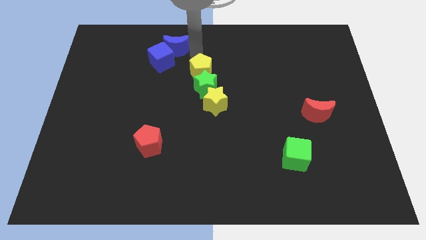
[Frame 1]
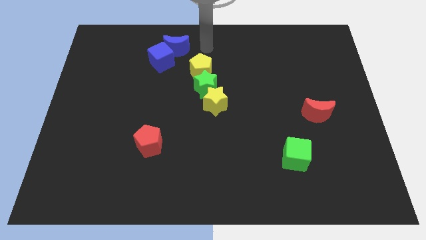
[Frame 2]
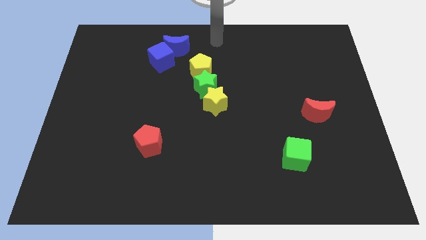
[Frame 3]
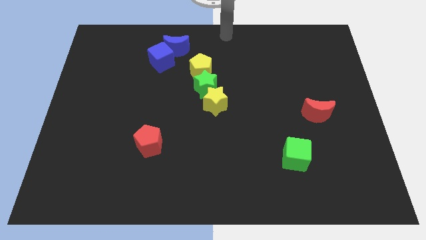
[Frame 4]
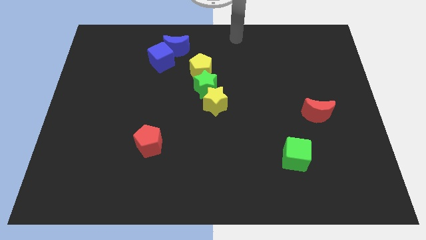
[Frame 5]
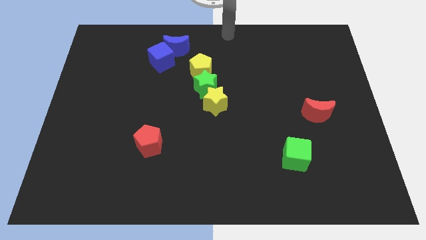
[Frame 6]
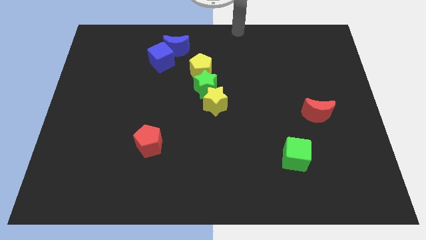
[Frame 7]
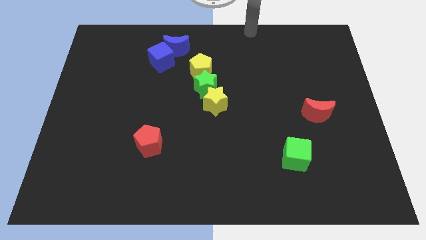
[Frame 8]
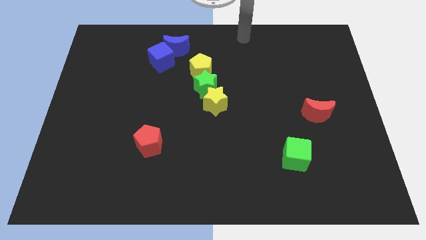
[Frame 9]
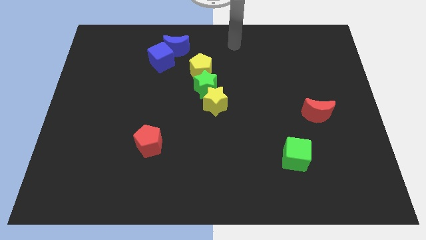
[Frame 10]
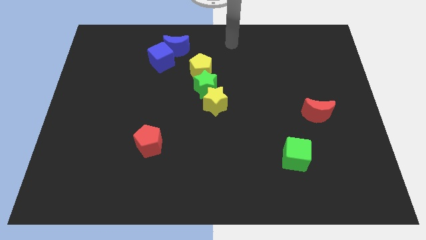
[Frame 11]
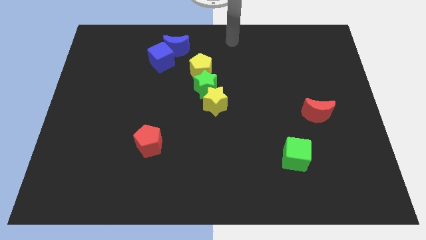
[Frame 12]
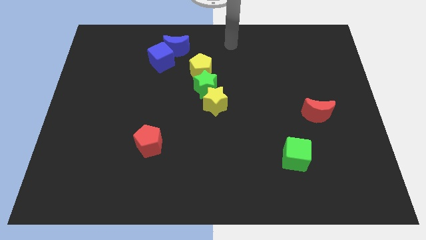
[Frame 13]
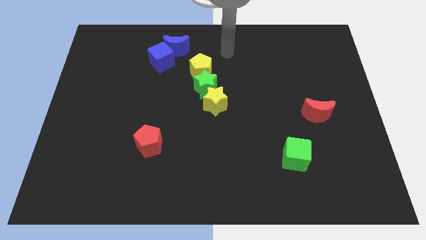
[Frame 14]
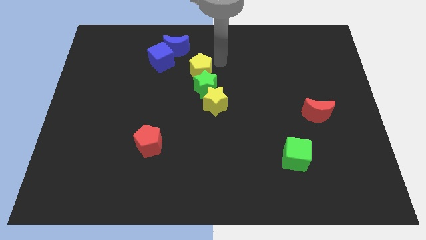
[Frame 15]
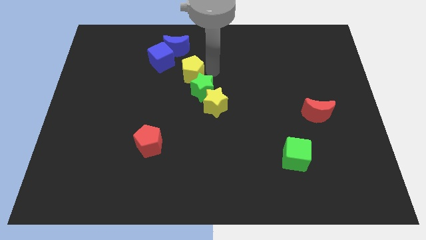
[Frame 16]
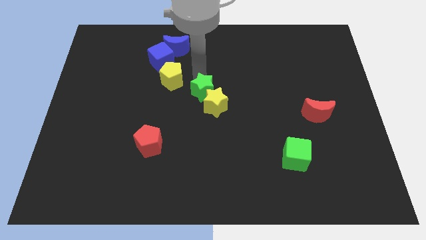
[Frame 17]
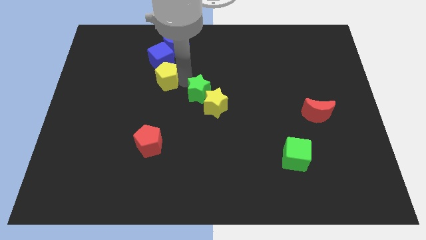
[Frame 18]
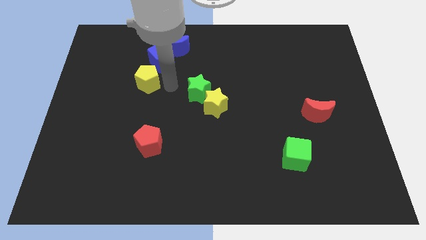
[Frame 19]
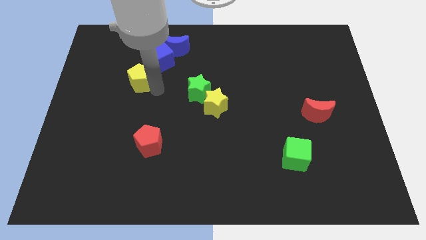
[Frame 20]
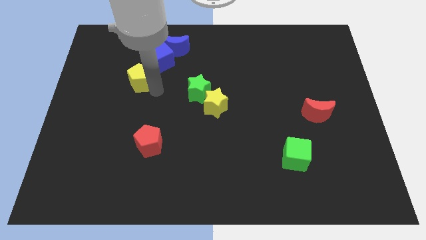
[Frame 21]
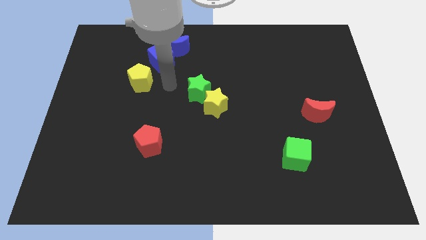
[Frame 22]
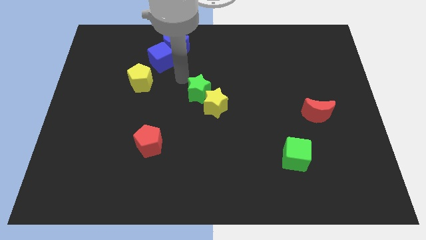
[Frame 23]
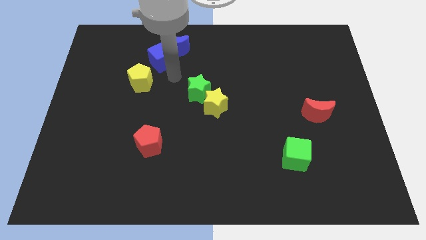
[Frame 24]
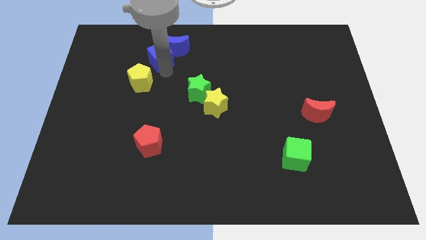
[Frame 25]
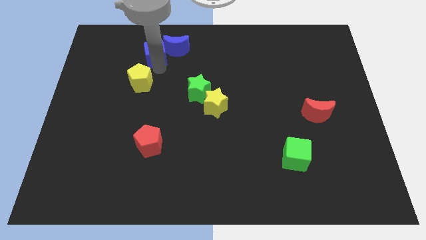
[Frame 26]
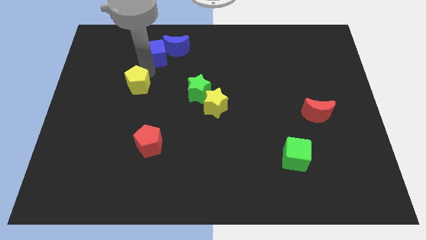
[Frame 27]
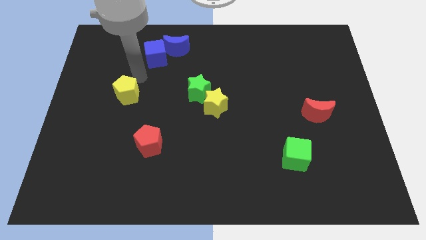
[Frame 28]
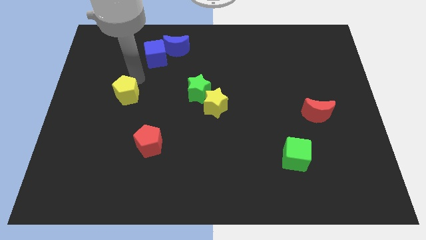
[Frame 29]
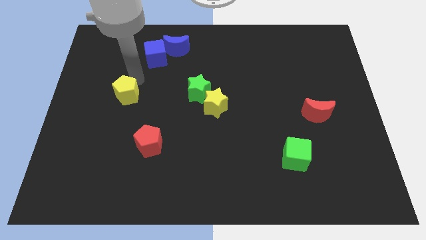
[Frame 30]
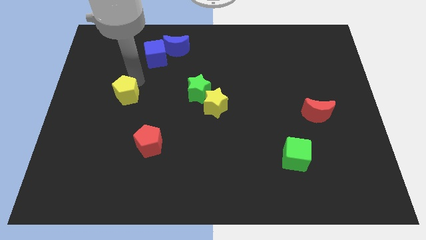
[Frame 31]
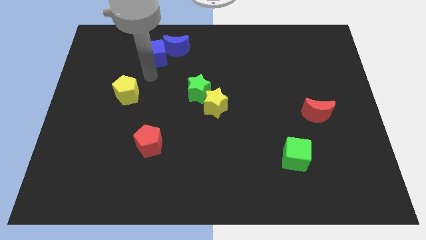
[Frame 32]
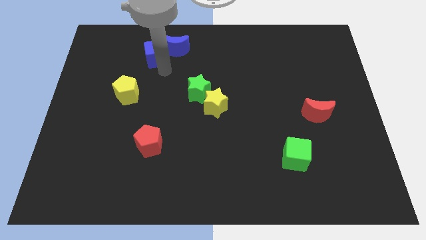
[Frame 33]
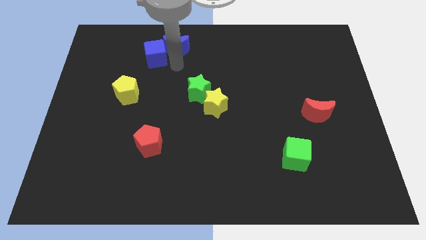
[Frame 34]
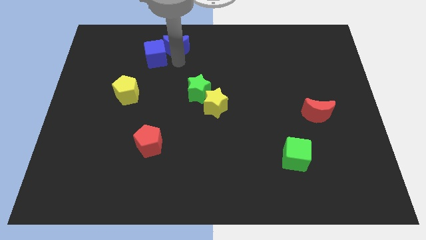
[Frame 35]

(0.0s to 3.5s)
separate the yellow pentagon from the green star

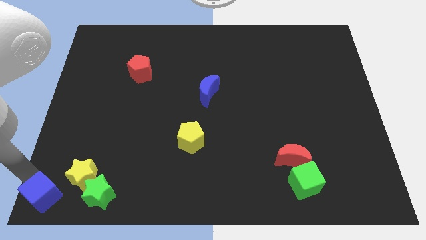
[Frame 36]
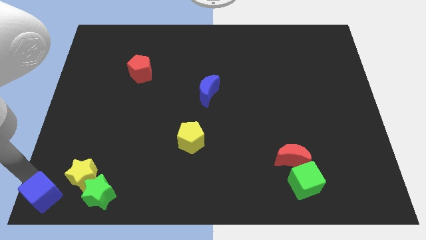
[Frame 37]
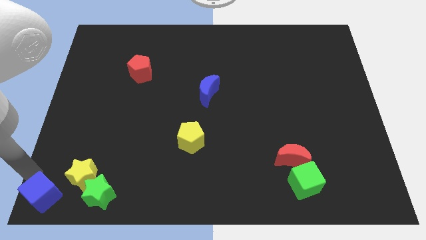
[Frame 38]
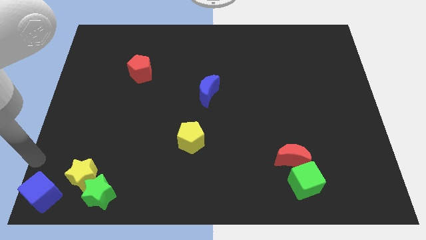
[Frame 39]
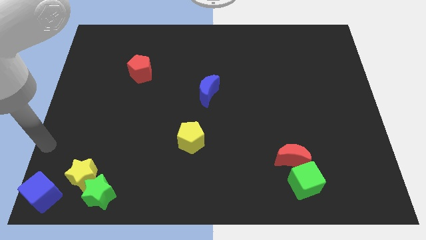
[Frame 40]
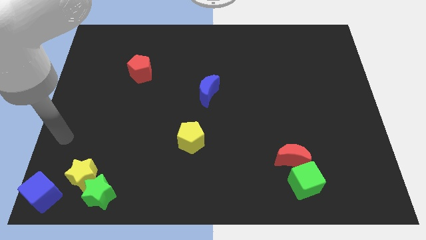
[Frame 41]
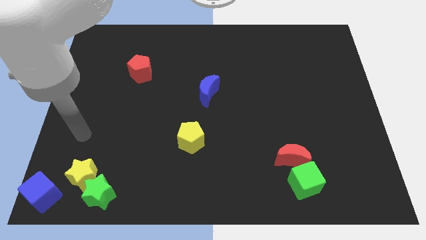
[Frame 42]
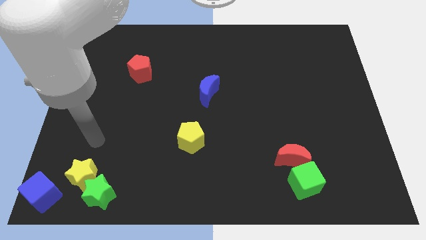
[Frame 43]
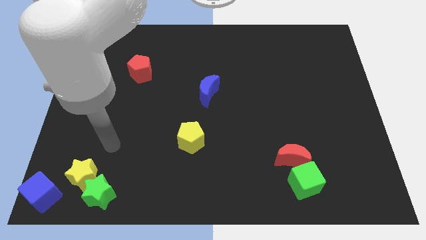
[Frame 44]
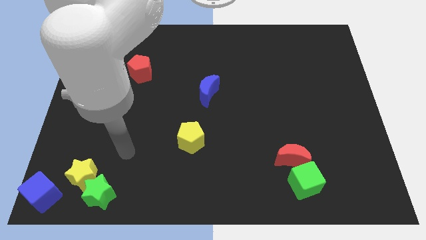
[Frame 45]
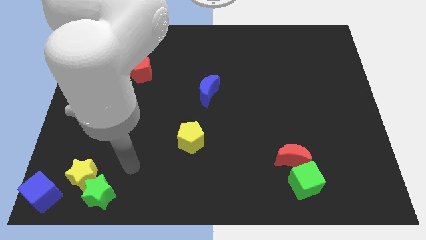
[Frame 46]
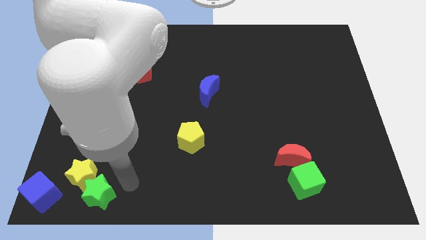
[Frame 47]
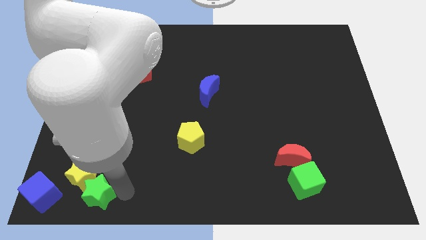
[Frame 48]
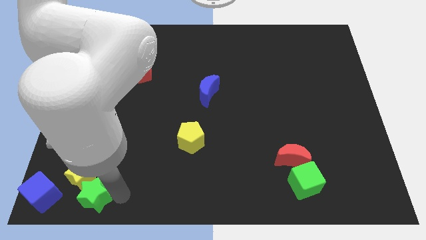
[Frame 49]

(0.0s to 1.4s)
move the arm to the right of the green star

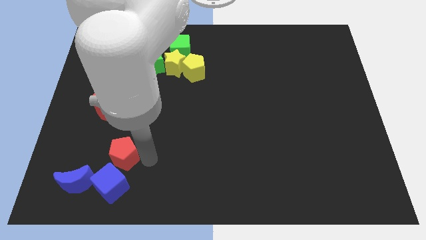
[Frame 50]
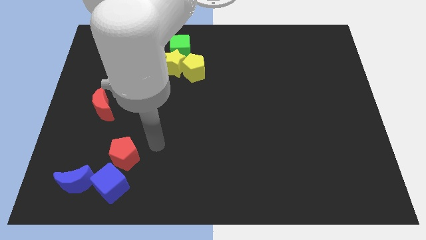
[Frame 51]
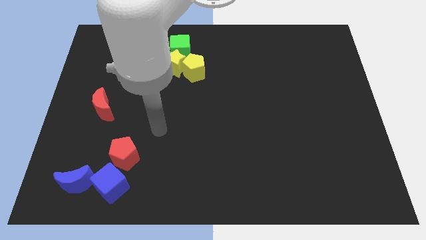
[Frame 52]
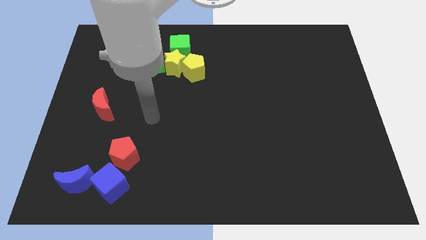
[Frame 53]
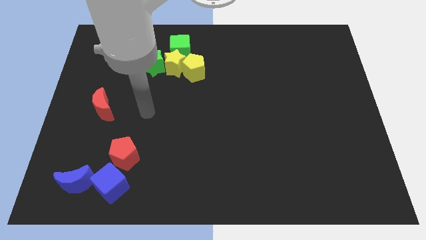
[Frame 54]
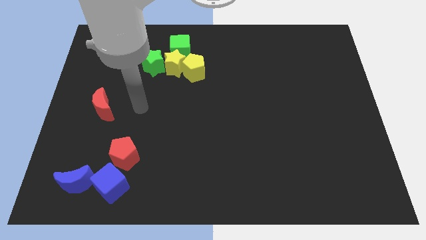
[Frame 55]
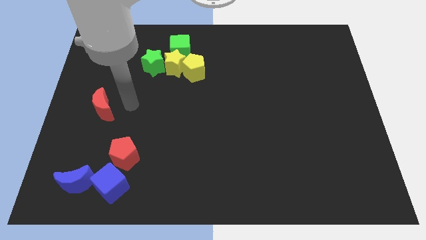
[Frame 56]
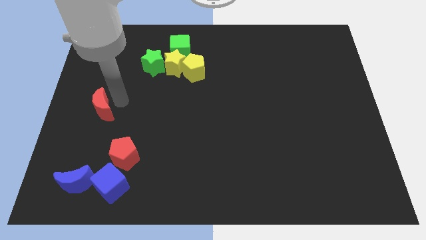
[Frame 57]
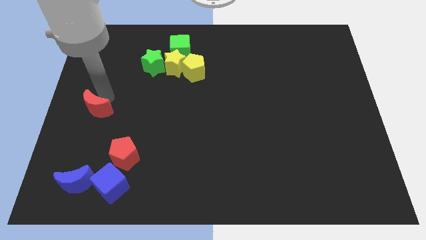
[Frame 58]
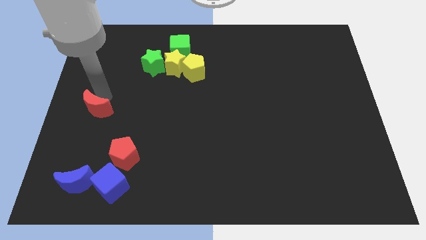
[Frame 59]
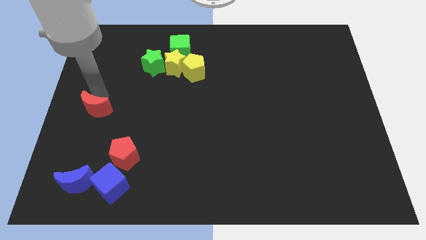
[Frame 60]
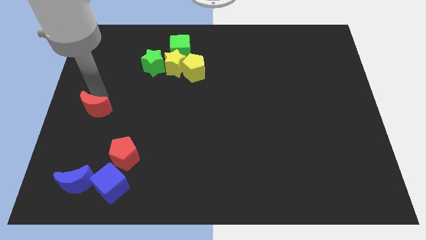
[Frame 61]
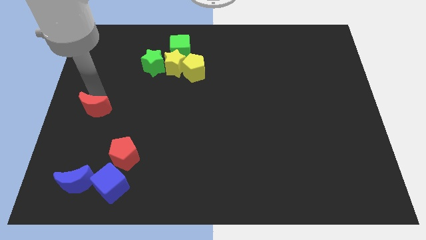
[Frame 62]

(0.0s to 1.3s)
move the red crescent diagonally on the top left side of the red pentagon

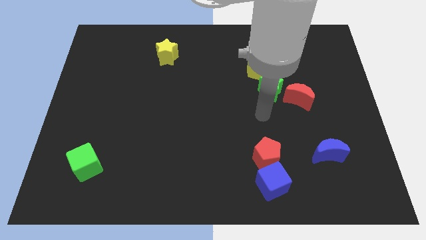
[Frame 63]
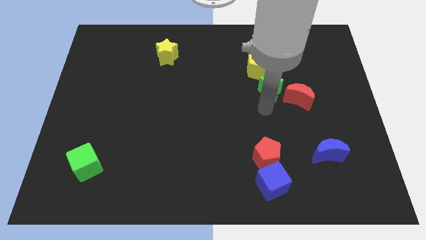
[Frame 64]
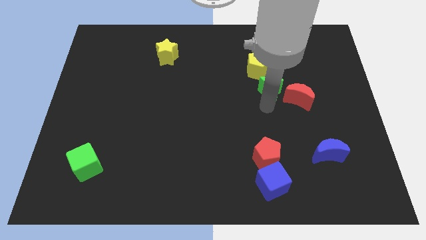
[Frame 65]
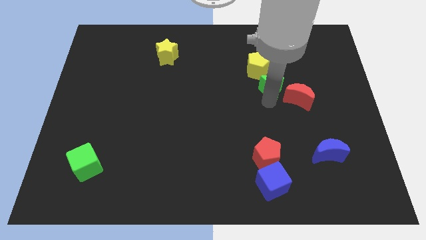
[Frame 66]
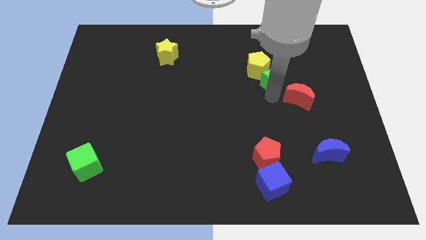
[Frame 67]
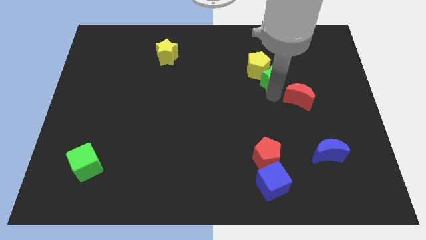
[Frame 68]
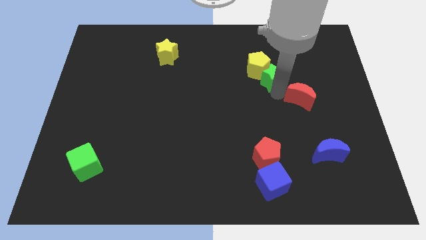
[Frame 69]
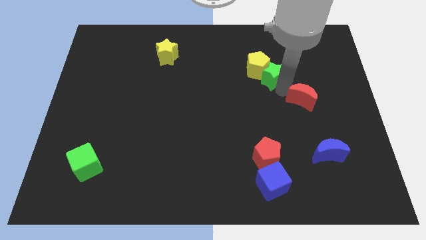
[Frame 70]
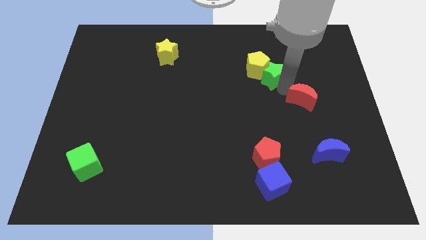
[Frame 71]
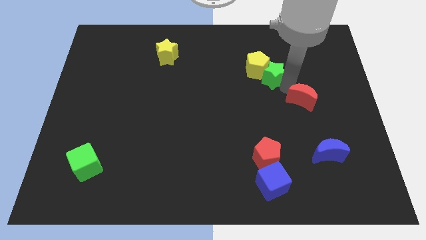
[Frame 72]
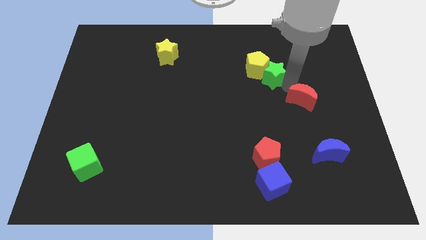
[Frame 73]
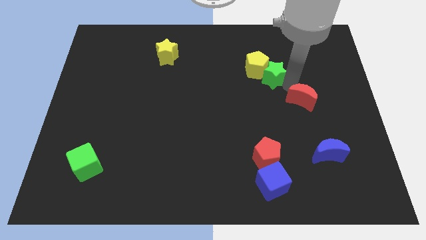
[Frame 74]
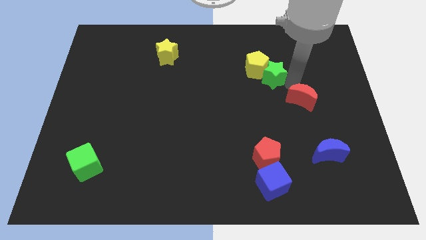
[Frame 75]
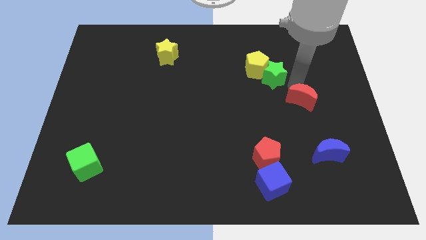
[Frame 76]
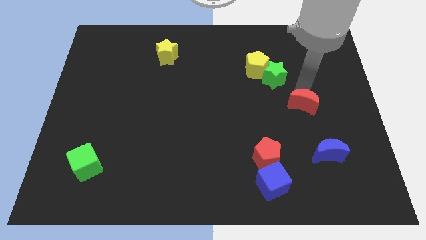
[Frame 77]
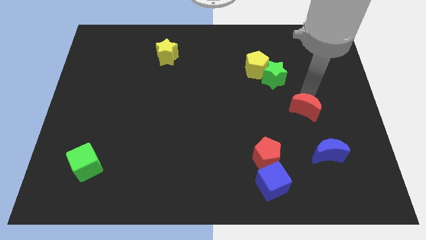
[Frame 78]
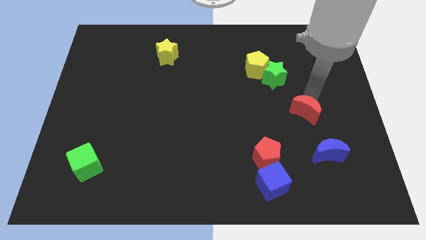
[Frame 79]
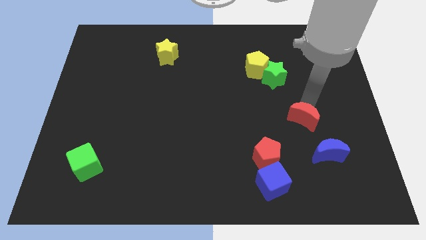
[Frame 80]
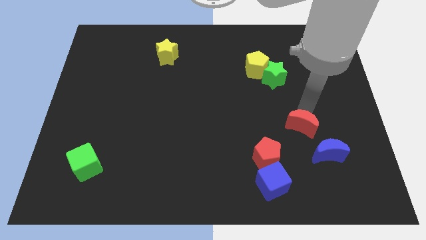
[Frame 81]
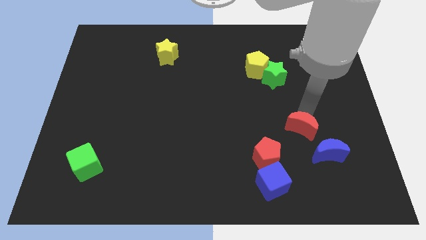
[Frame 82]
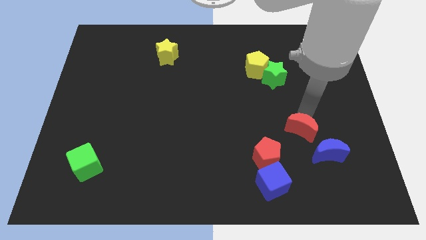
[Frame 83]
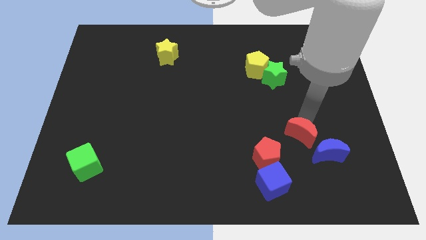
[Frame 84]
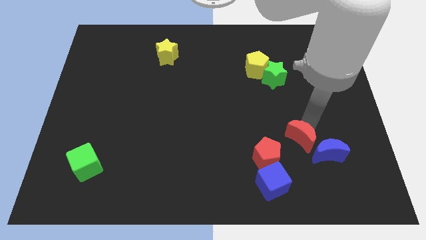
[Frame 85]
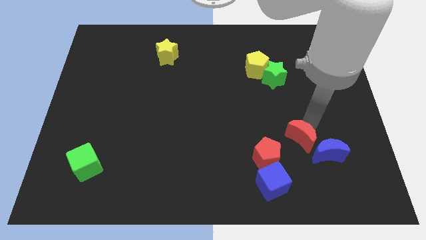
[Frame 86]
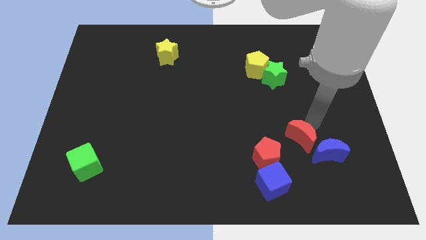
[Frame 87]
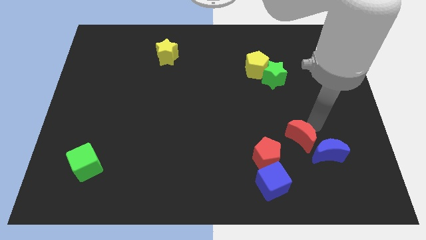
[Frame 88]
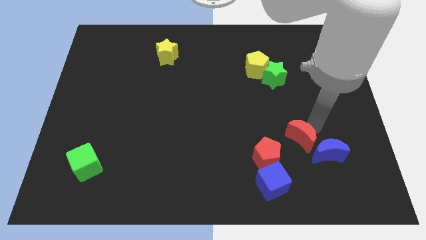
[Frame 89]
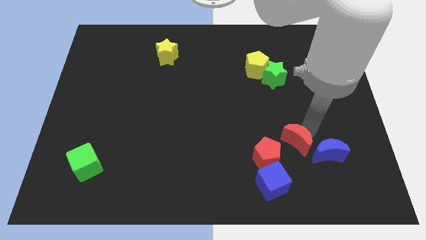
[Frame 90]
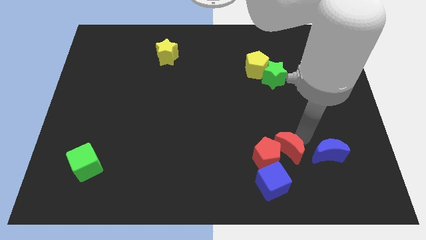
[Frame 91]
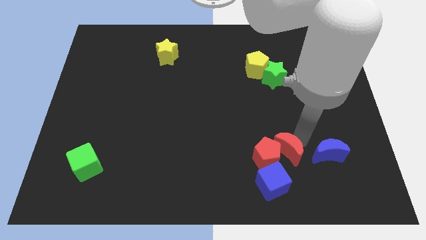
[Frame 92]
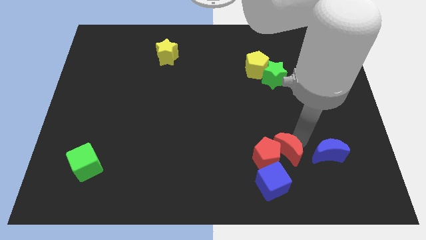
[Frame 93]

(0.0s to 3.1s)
move the red moon into the red pentagon
